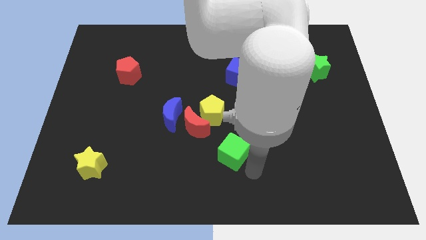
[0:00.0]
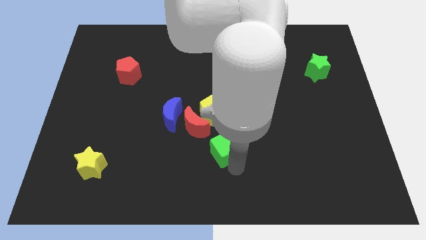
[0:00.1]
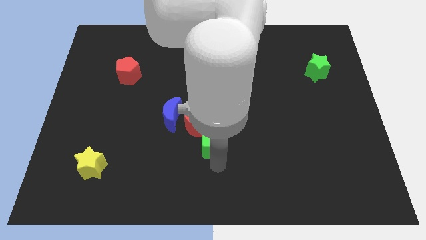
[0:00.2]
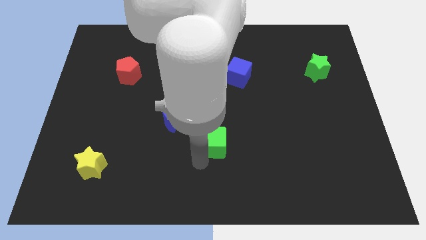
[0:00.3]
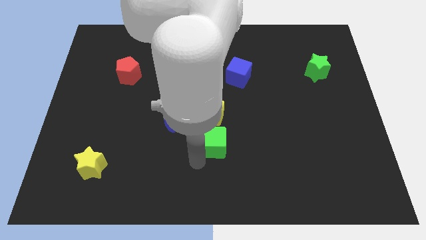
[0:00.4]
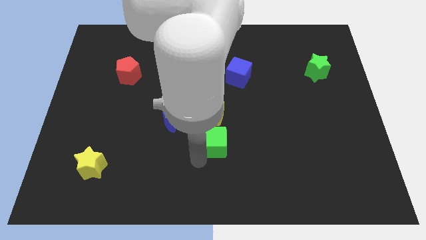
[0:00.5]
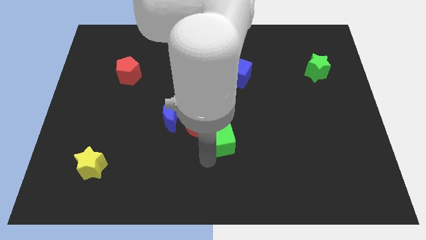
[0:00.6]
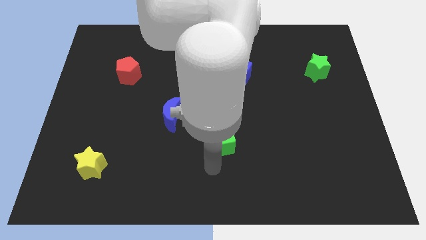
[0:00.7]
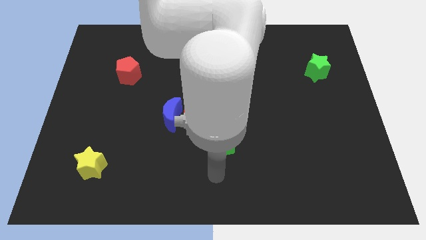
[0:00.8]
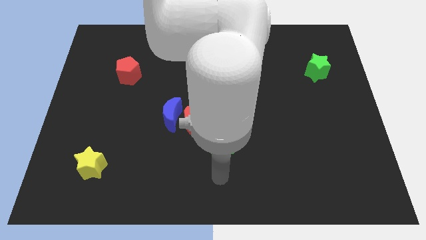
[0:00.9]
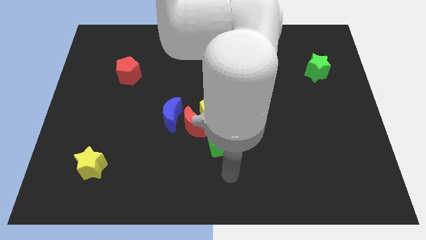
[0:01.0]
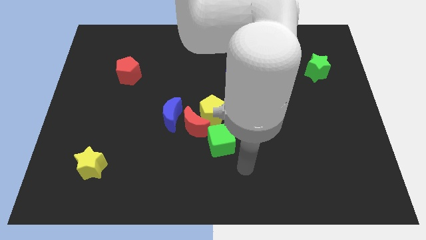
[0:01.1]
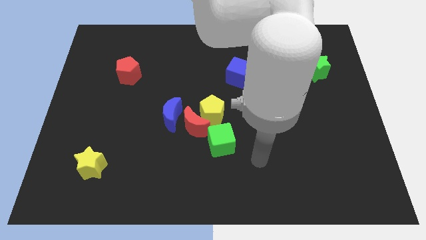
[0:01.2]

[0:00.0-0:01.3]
push the green cube close to the red crescent

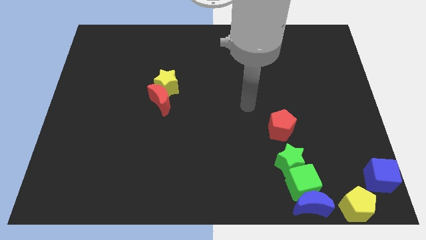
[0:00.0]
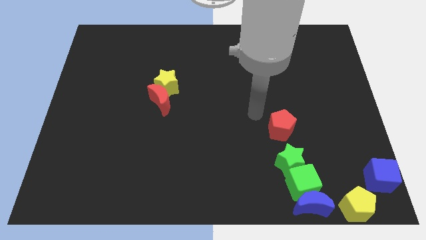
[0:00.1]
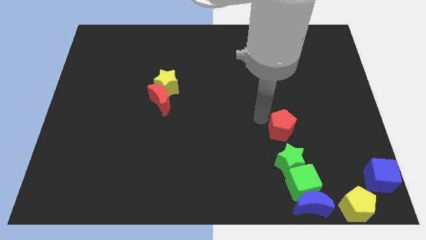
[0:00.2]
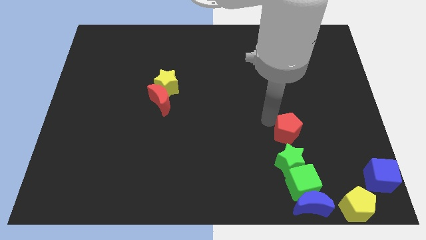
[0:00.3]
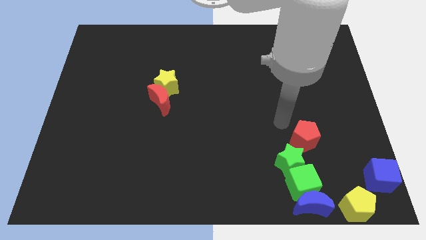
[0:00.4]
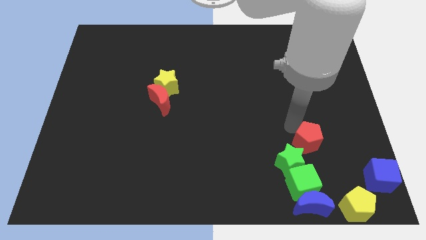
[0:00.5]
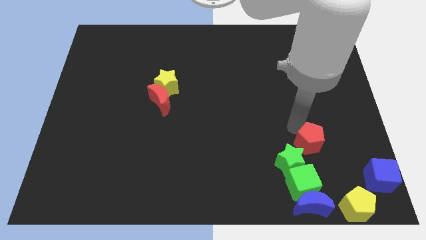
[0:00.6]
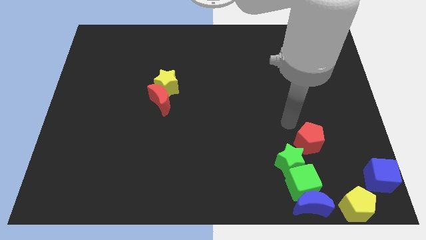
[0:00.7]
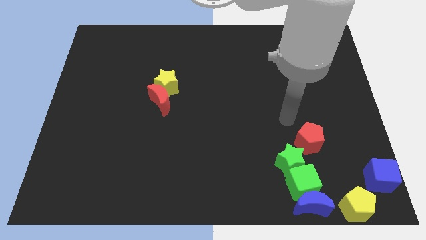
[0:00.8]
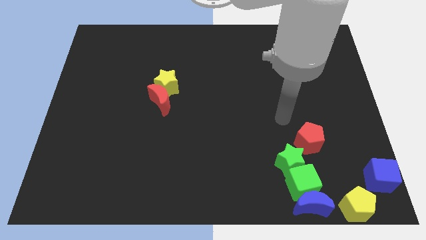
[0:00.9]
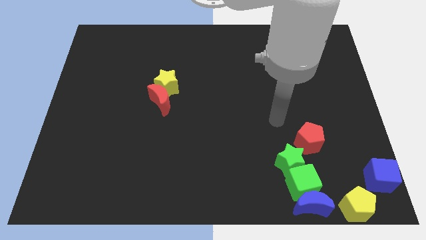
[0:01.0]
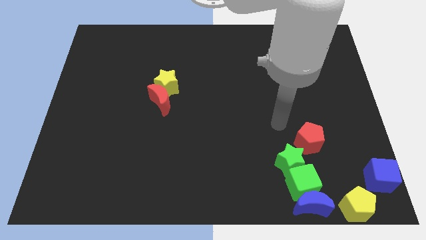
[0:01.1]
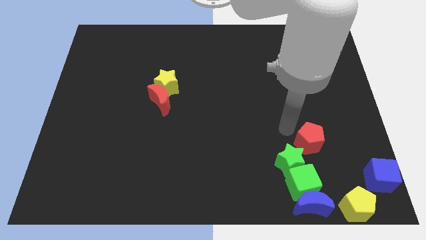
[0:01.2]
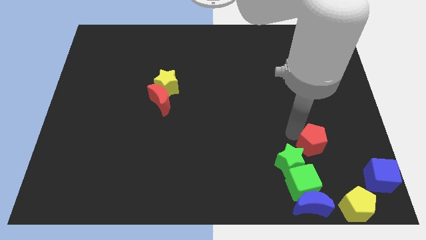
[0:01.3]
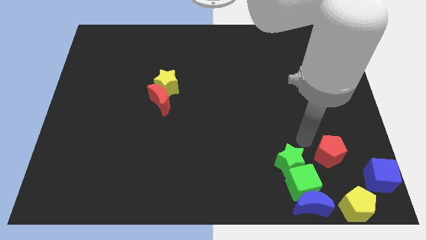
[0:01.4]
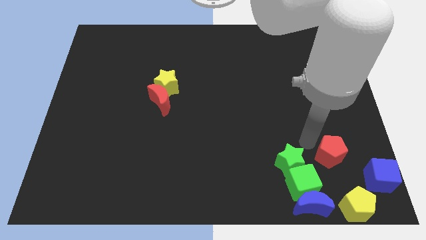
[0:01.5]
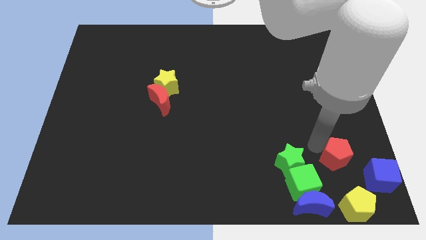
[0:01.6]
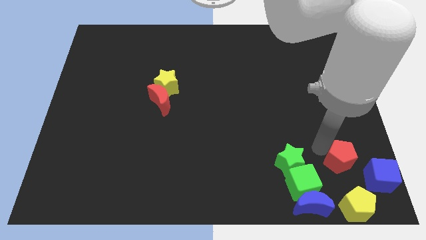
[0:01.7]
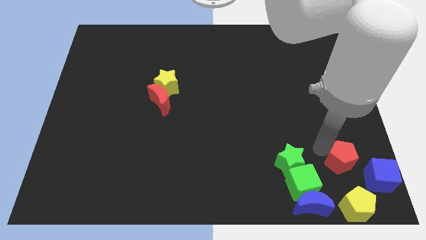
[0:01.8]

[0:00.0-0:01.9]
slide the red pentagon parallel right to the green star

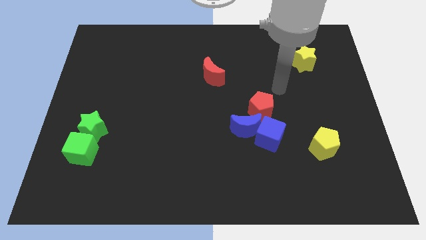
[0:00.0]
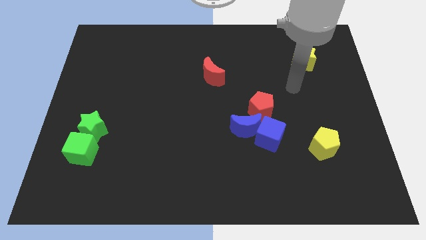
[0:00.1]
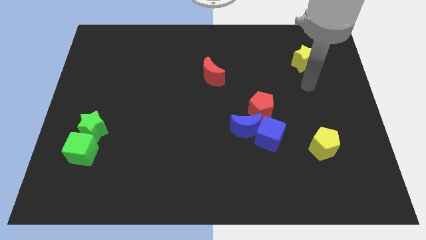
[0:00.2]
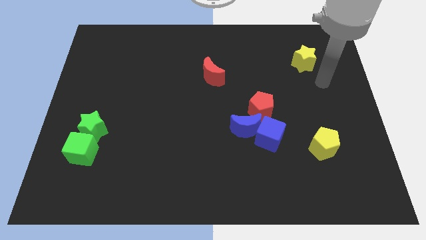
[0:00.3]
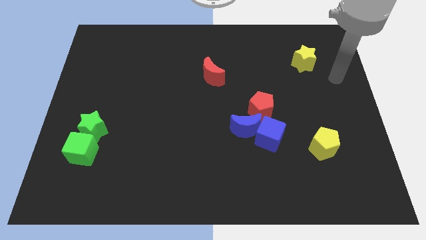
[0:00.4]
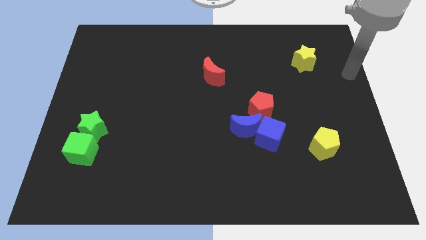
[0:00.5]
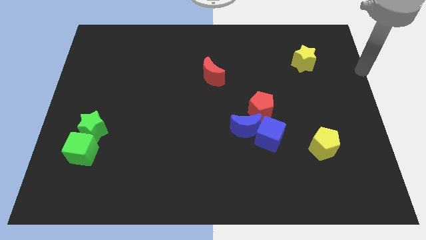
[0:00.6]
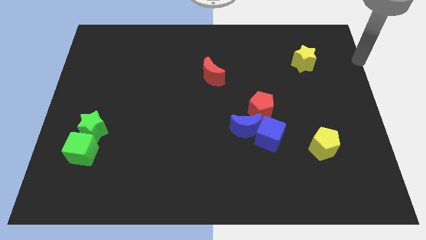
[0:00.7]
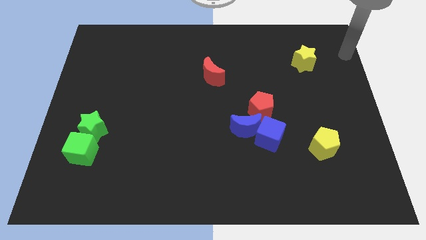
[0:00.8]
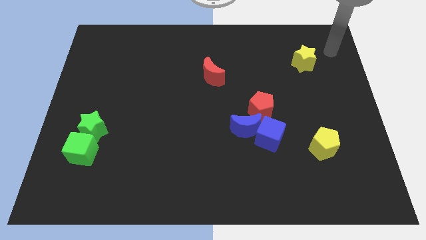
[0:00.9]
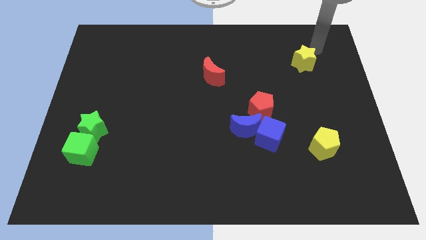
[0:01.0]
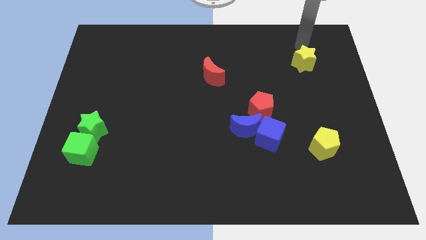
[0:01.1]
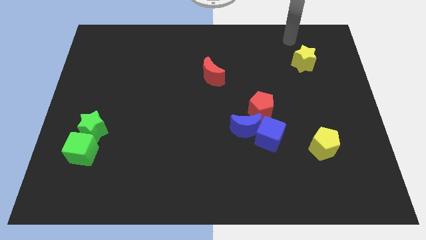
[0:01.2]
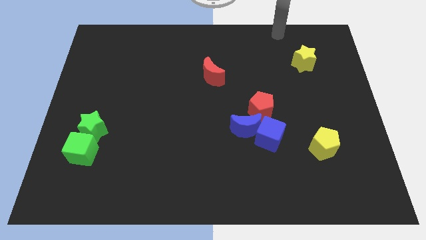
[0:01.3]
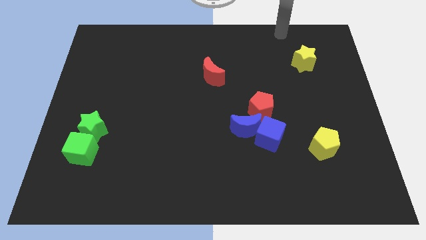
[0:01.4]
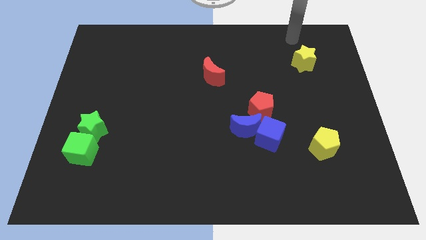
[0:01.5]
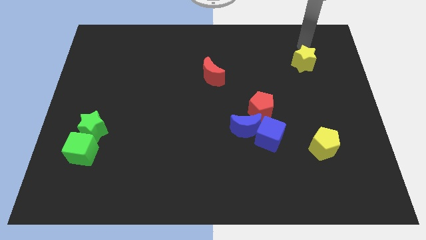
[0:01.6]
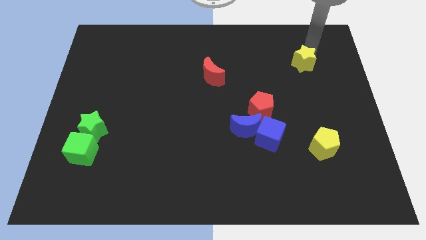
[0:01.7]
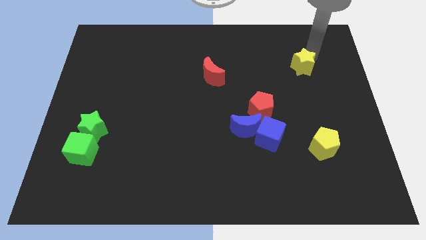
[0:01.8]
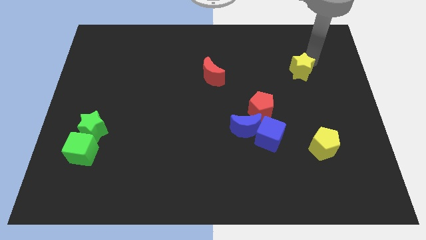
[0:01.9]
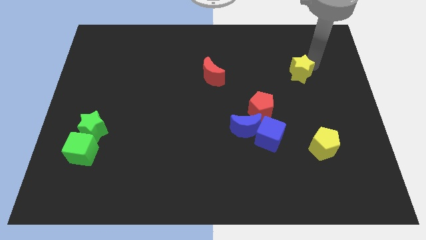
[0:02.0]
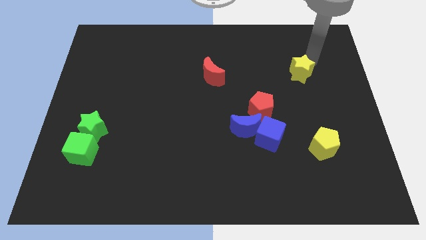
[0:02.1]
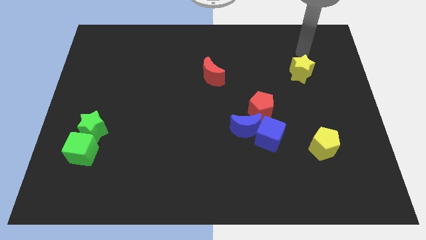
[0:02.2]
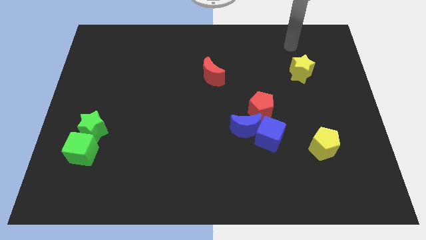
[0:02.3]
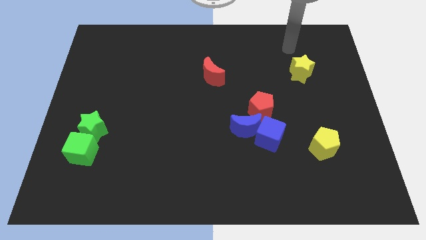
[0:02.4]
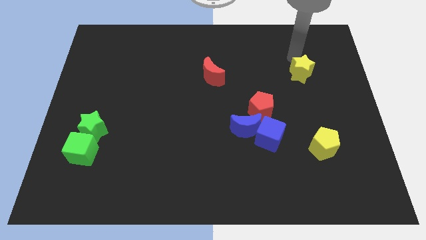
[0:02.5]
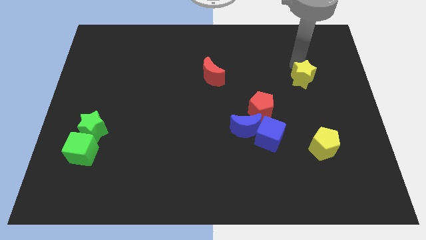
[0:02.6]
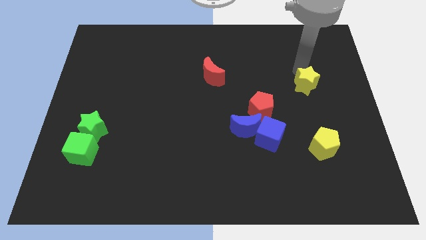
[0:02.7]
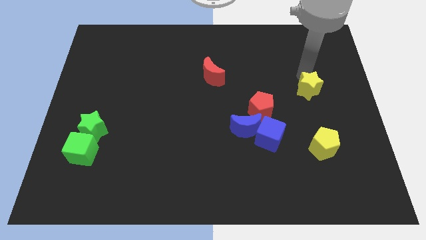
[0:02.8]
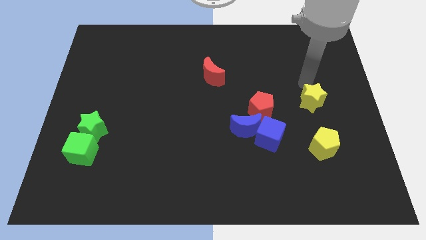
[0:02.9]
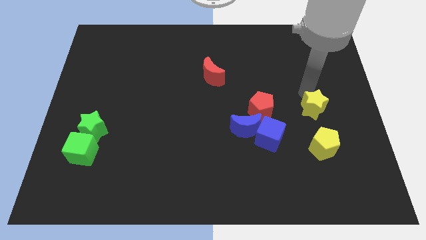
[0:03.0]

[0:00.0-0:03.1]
place the yellow star right to the red pentagon

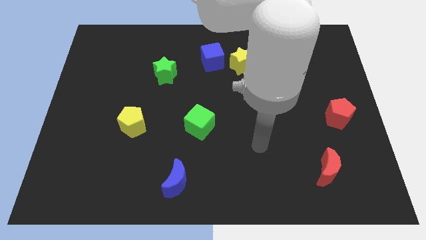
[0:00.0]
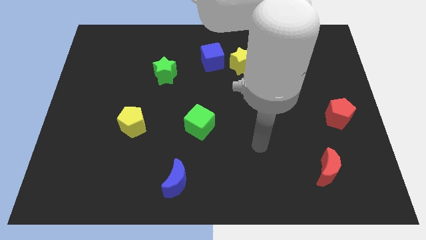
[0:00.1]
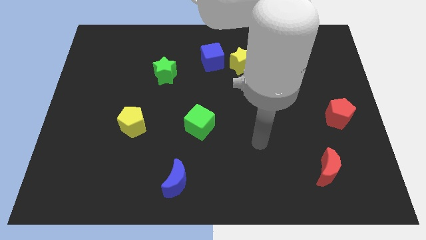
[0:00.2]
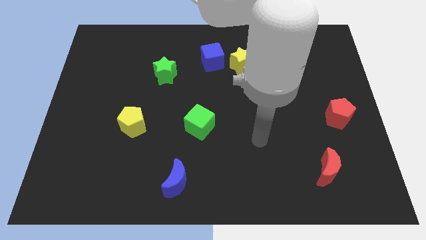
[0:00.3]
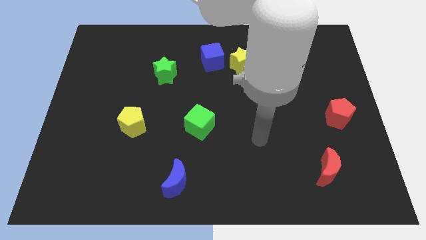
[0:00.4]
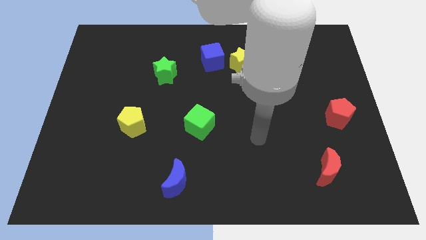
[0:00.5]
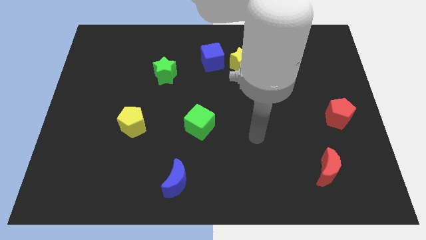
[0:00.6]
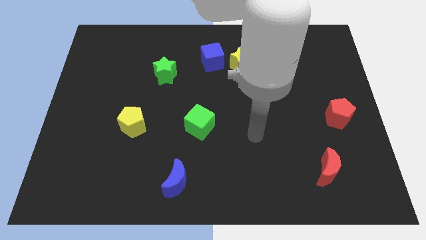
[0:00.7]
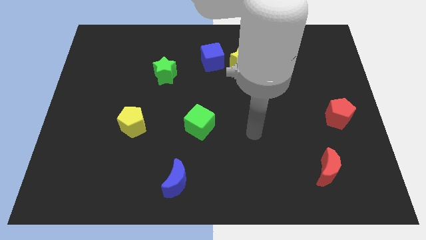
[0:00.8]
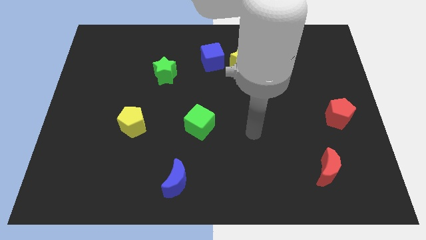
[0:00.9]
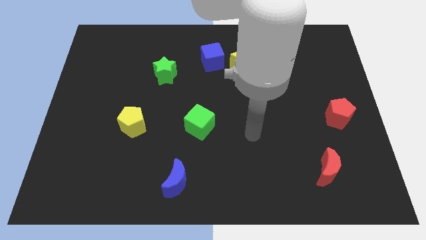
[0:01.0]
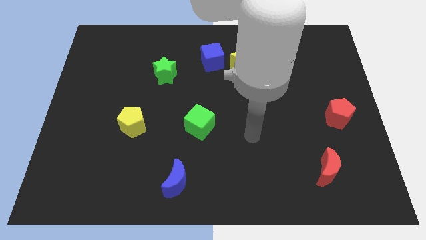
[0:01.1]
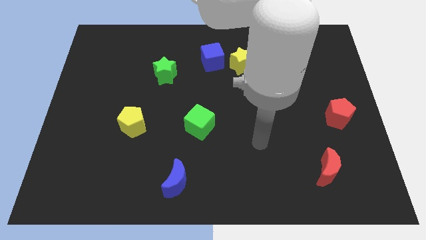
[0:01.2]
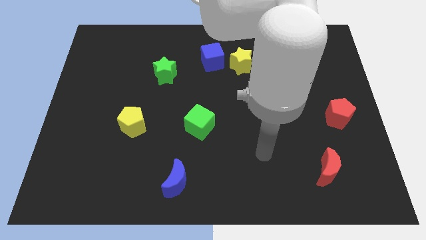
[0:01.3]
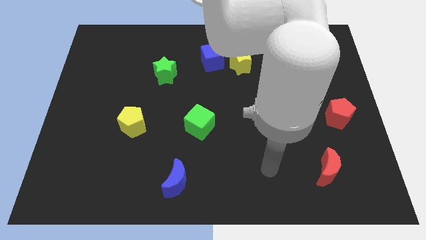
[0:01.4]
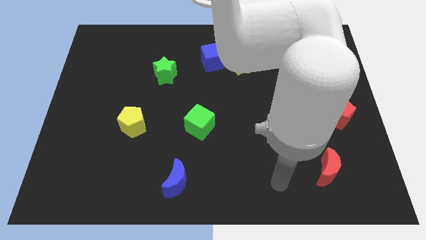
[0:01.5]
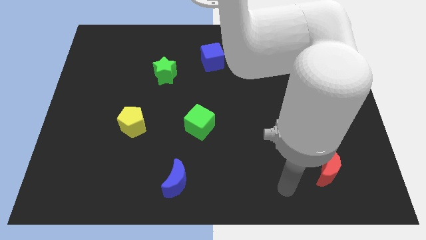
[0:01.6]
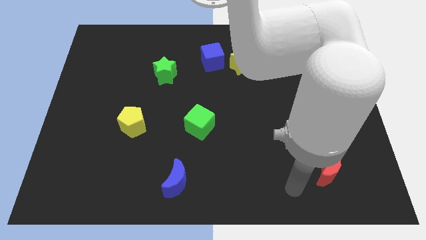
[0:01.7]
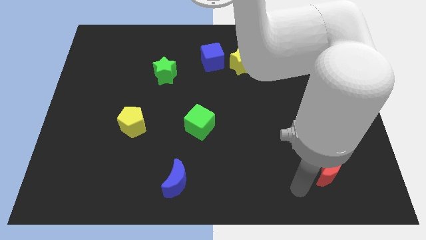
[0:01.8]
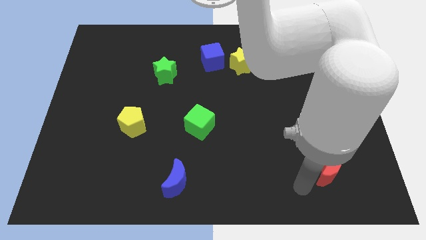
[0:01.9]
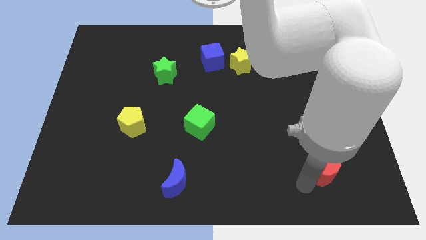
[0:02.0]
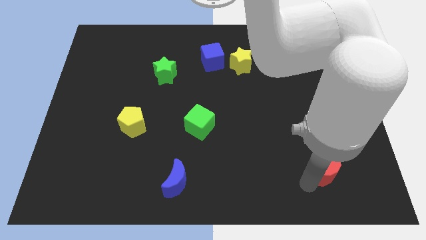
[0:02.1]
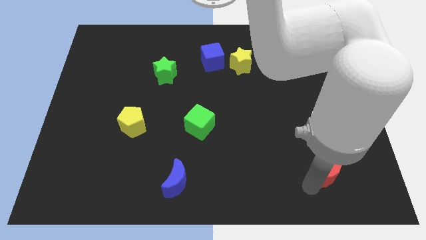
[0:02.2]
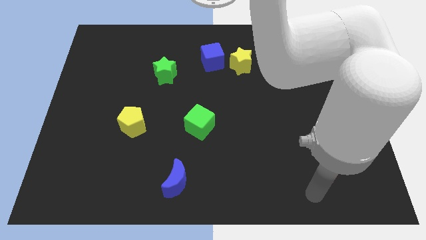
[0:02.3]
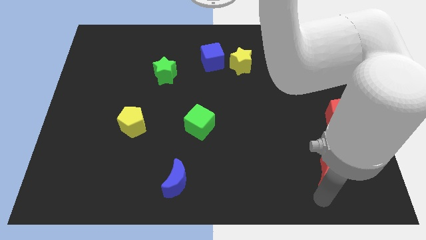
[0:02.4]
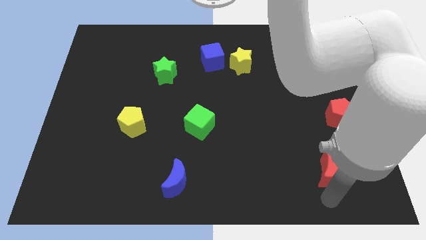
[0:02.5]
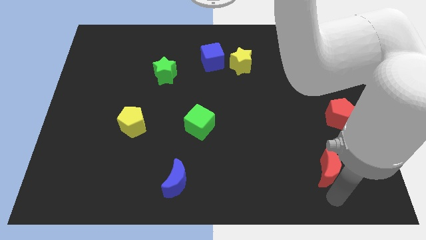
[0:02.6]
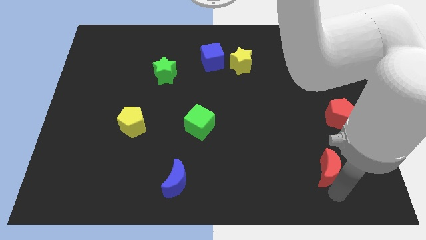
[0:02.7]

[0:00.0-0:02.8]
slightly move the red crescent to the top of the board
